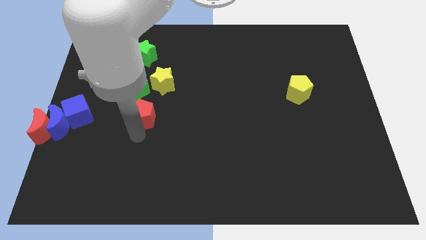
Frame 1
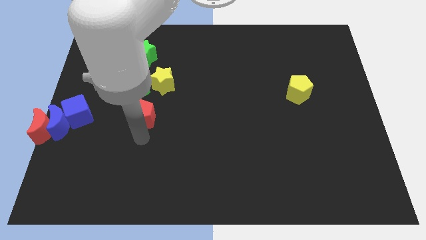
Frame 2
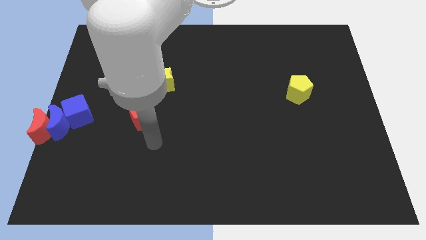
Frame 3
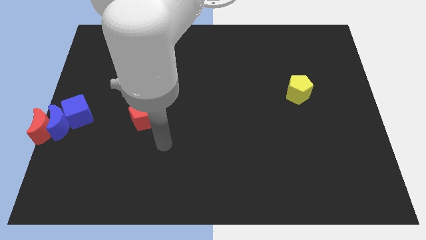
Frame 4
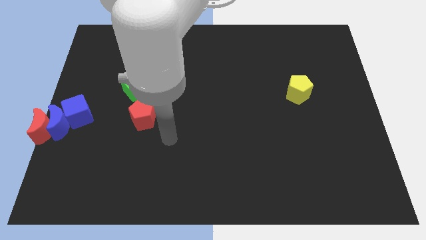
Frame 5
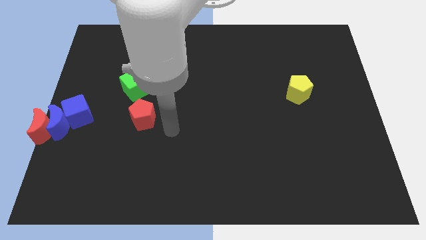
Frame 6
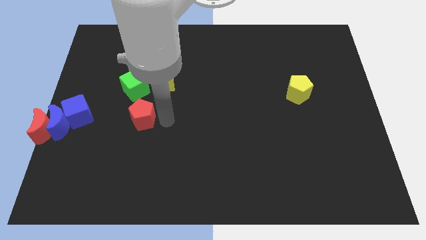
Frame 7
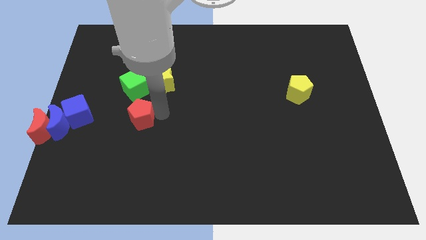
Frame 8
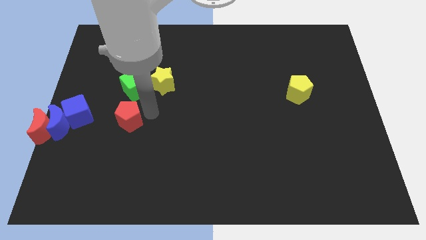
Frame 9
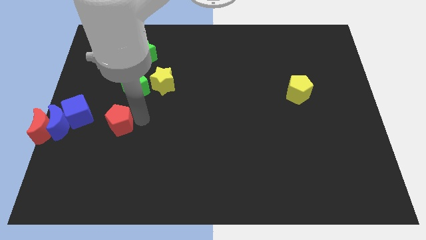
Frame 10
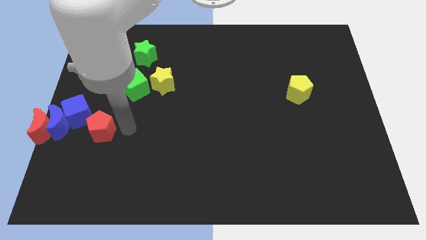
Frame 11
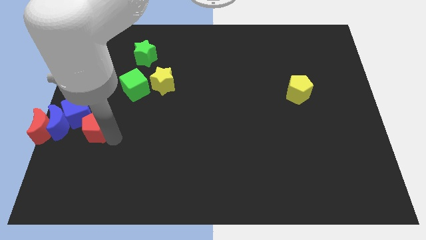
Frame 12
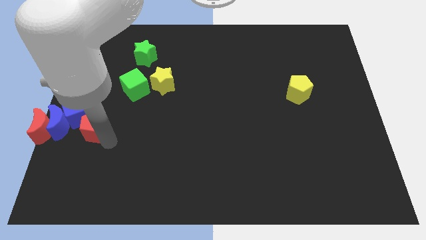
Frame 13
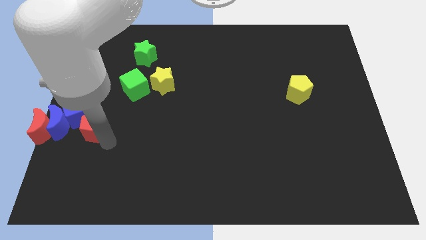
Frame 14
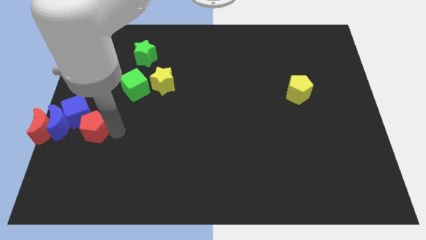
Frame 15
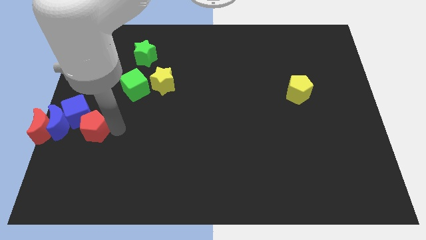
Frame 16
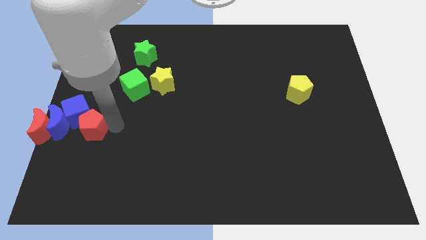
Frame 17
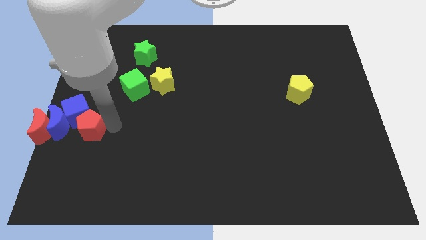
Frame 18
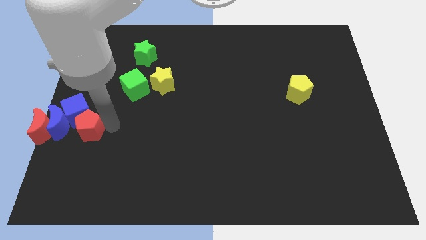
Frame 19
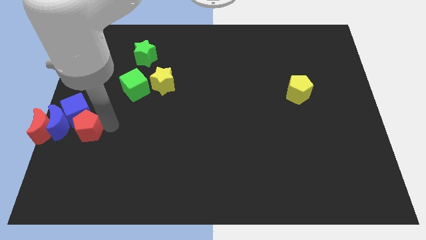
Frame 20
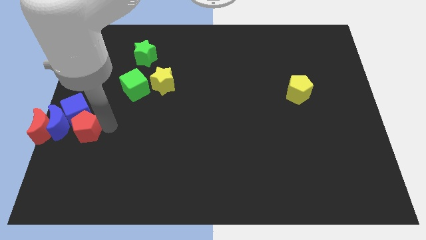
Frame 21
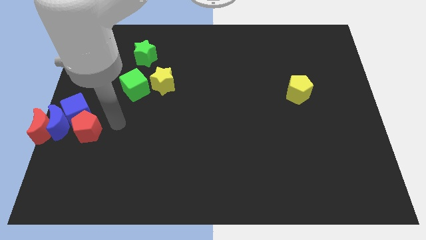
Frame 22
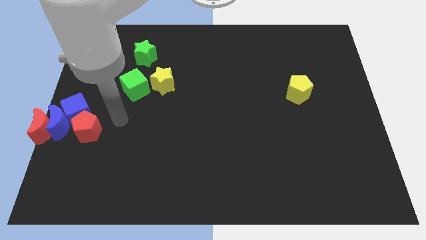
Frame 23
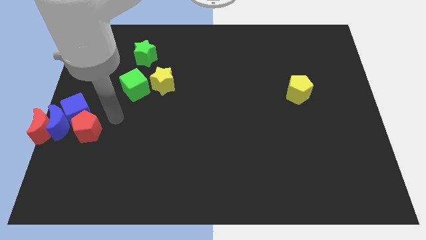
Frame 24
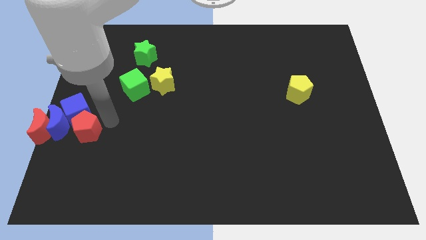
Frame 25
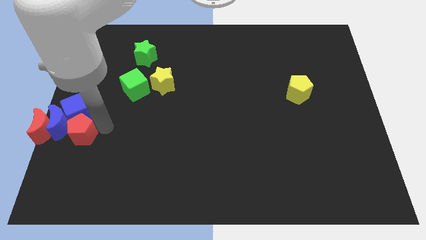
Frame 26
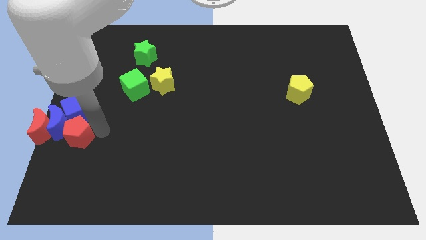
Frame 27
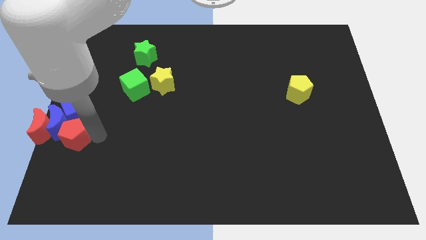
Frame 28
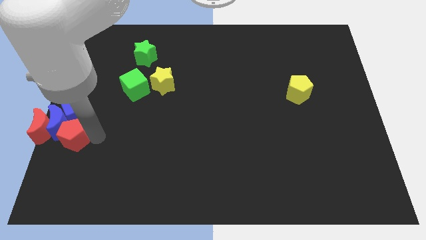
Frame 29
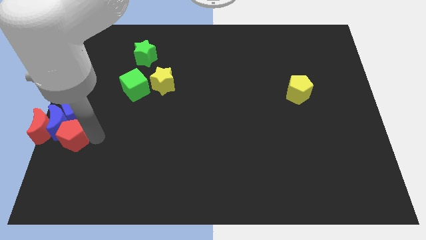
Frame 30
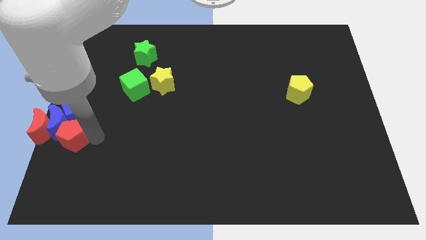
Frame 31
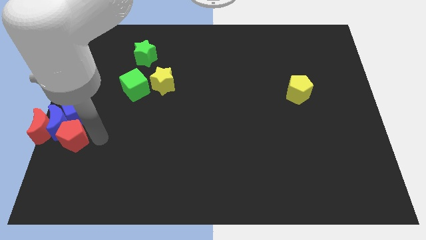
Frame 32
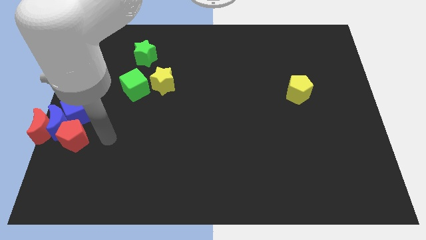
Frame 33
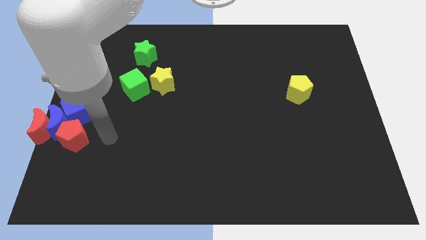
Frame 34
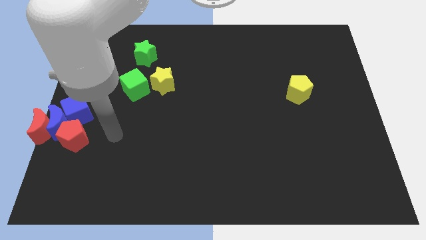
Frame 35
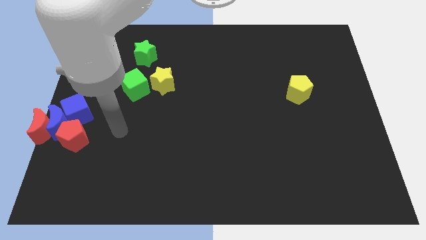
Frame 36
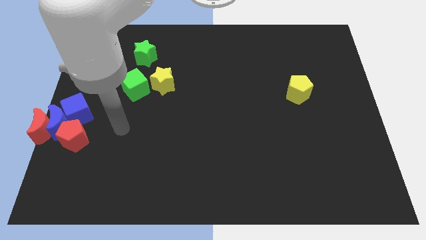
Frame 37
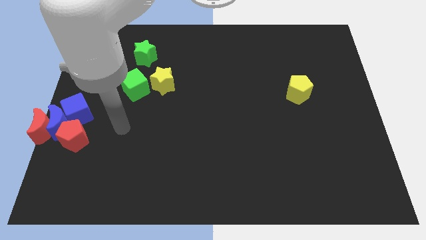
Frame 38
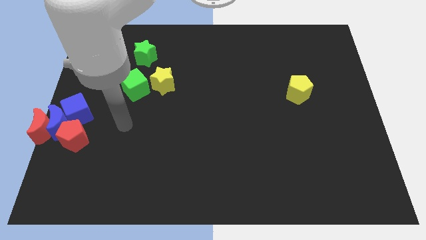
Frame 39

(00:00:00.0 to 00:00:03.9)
push red pentagon to left center of the board

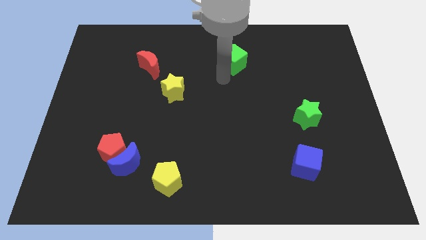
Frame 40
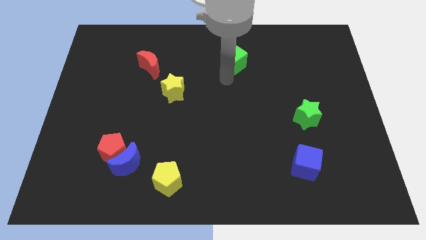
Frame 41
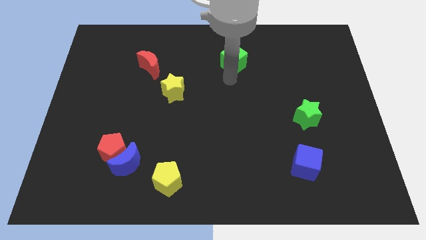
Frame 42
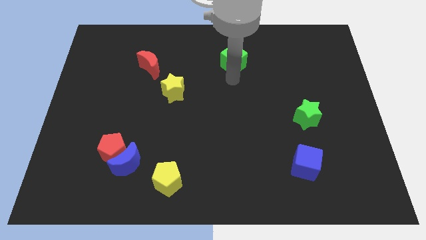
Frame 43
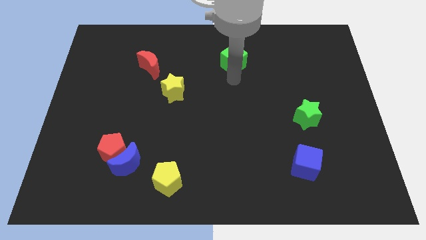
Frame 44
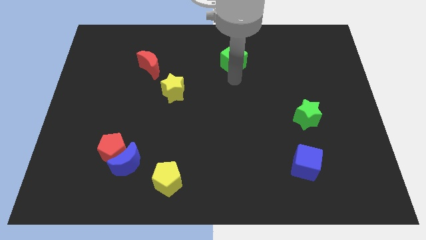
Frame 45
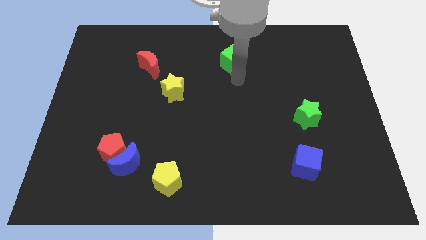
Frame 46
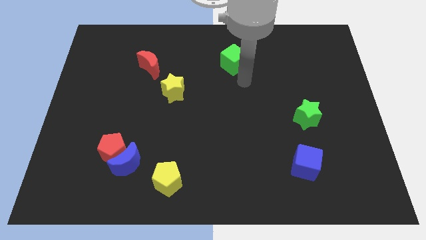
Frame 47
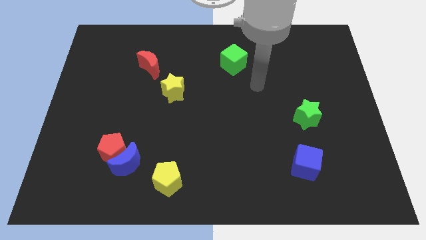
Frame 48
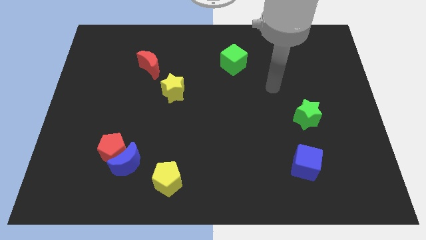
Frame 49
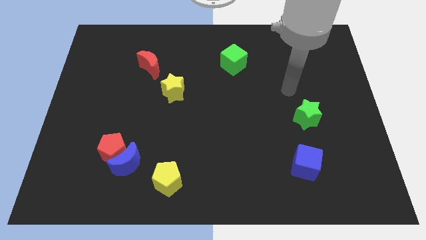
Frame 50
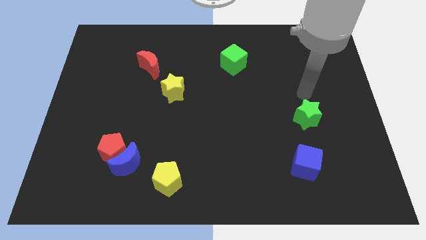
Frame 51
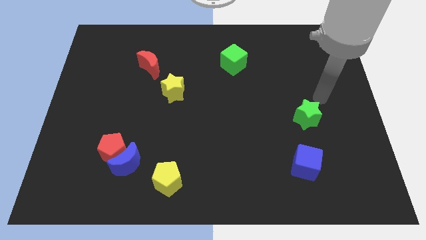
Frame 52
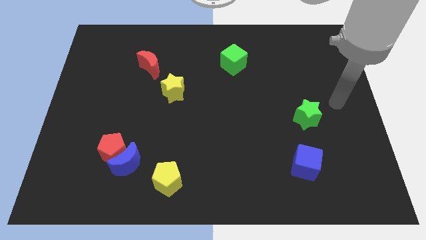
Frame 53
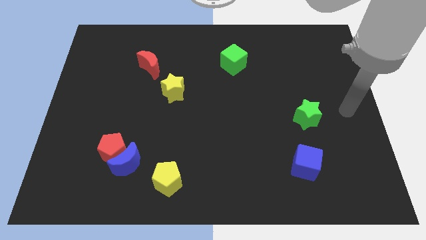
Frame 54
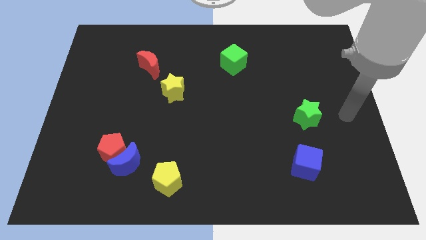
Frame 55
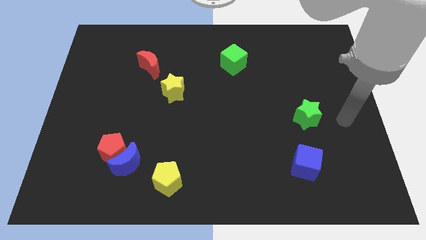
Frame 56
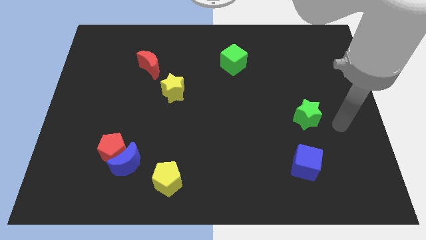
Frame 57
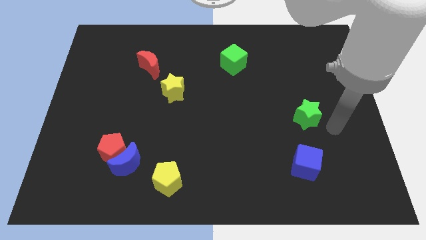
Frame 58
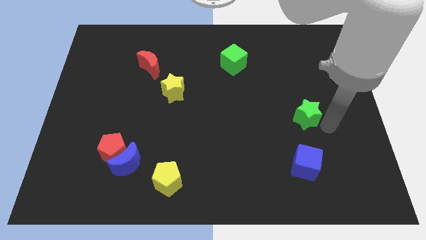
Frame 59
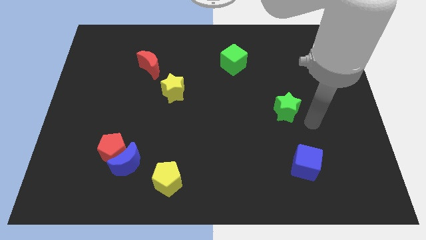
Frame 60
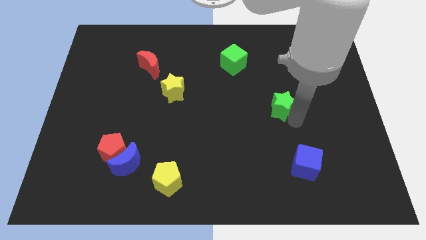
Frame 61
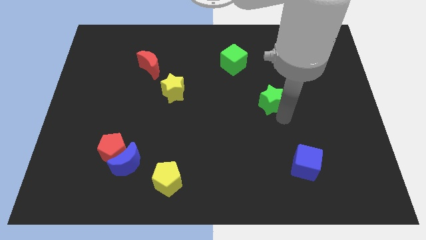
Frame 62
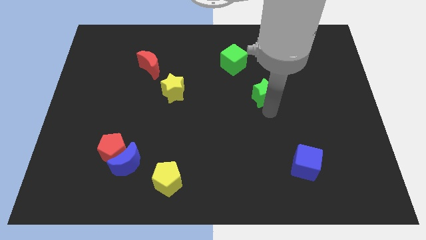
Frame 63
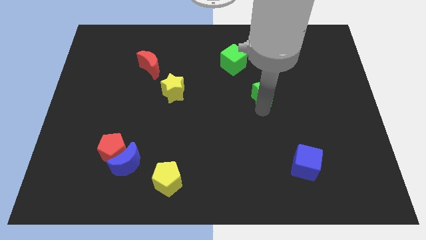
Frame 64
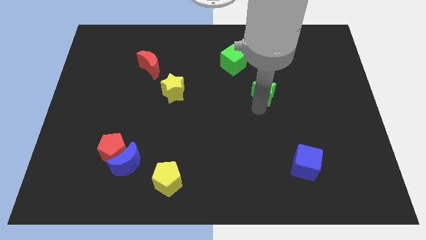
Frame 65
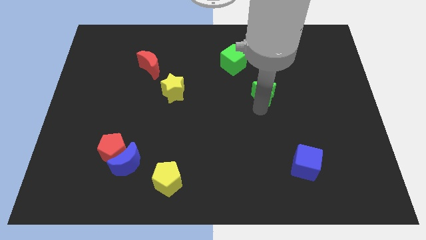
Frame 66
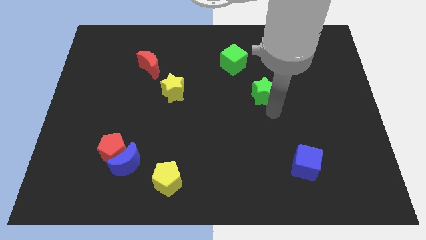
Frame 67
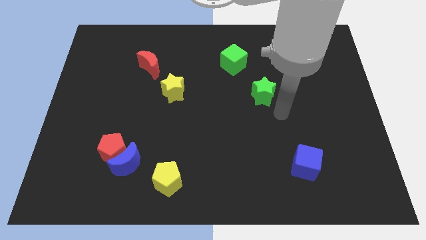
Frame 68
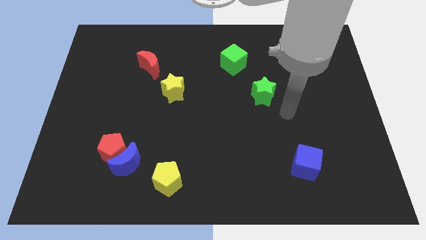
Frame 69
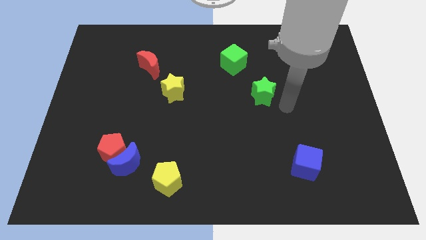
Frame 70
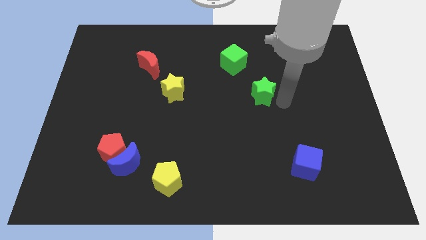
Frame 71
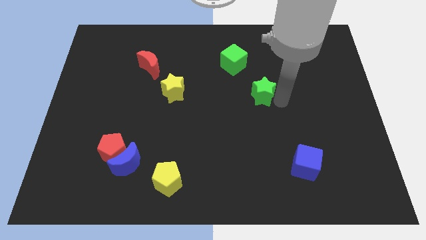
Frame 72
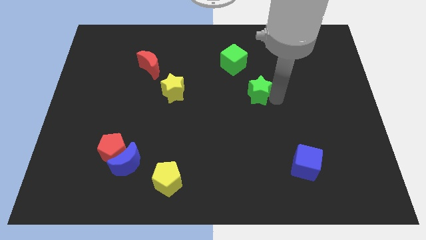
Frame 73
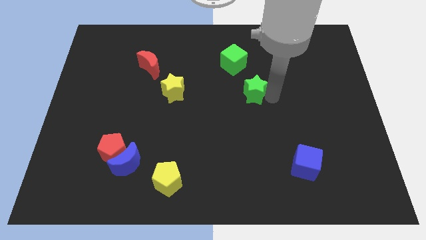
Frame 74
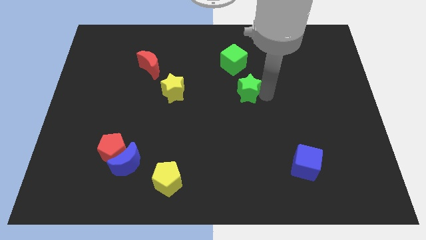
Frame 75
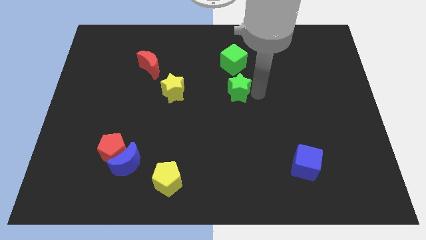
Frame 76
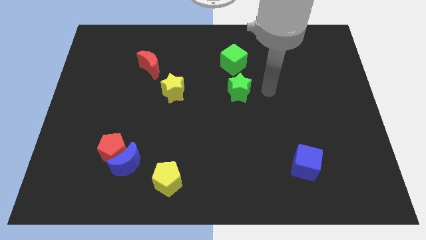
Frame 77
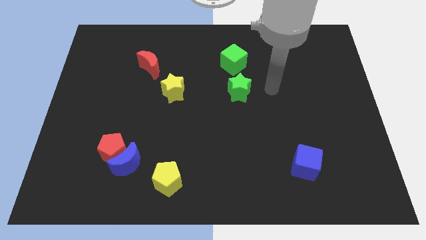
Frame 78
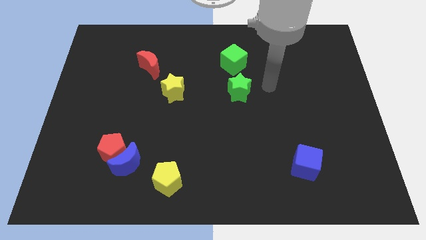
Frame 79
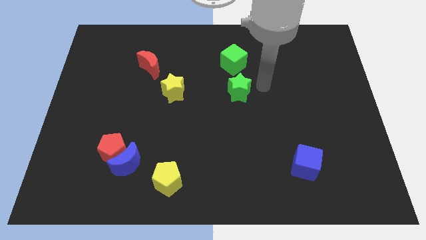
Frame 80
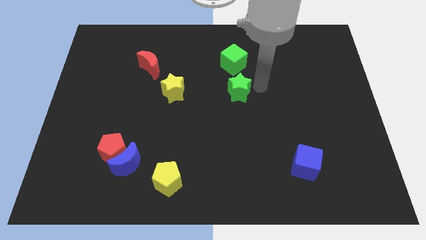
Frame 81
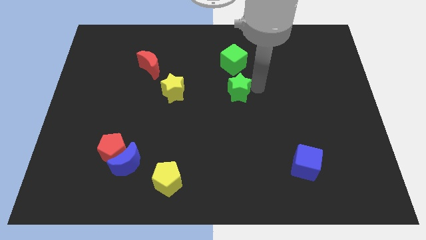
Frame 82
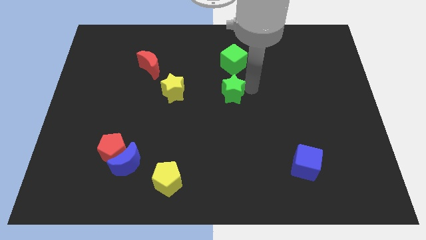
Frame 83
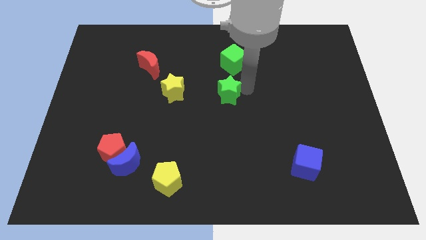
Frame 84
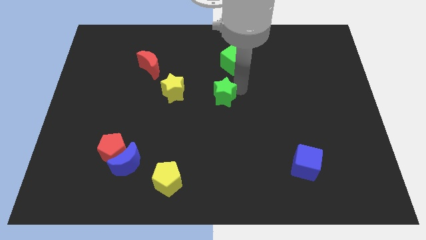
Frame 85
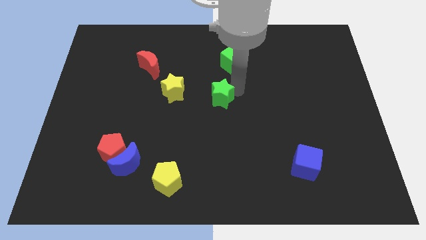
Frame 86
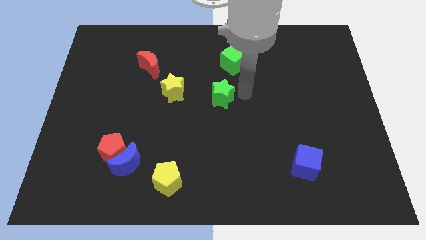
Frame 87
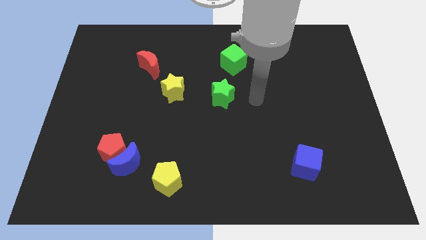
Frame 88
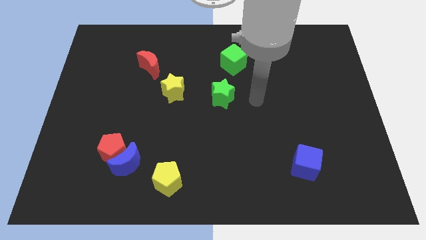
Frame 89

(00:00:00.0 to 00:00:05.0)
place the green star below the green cube
